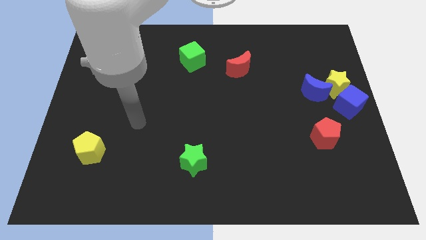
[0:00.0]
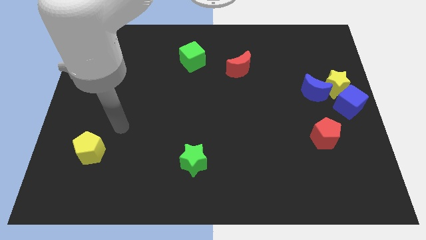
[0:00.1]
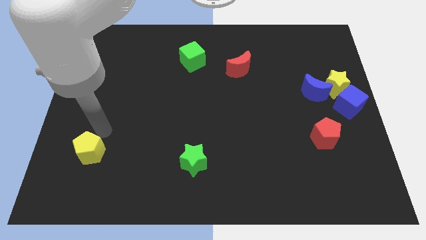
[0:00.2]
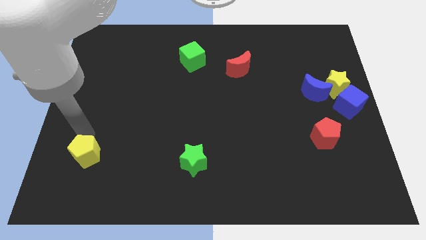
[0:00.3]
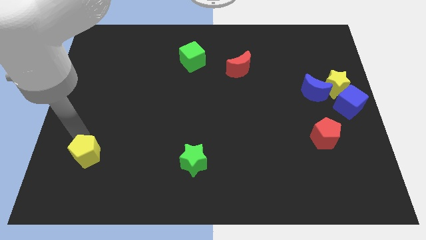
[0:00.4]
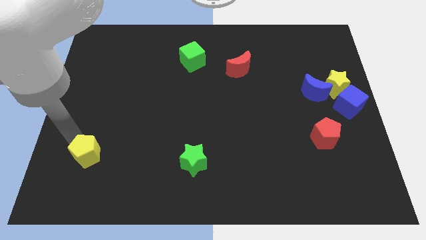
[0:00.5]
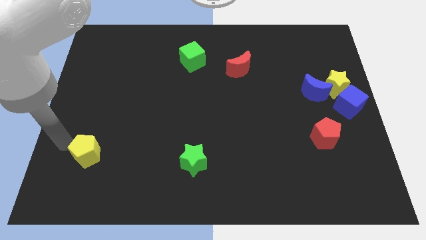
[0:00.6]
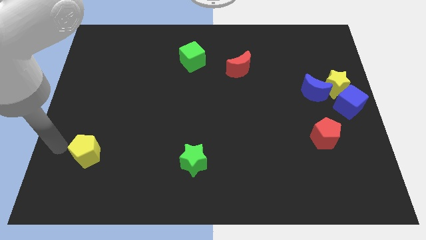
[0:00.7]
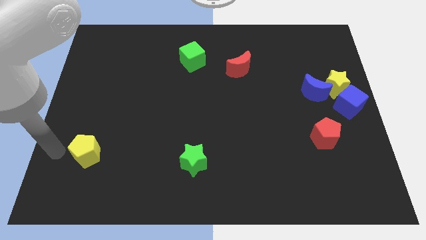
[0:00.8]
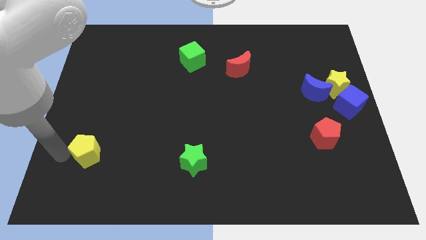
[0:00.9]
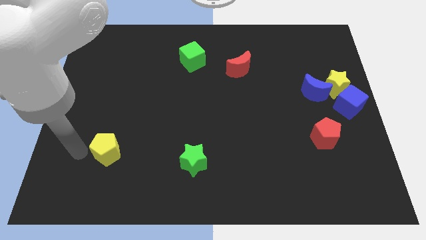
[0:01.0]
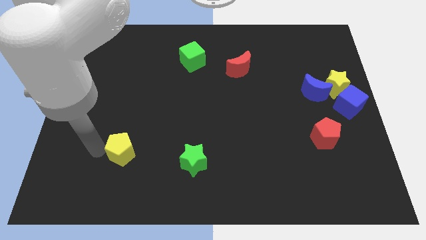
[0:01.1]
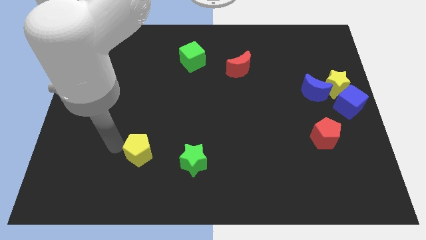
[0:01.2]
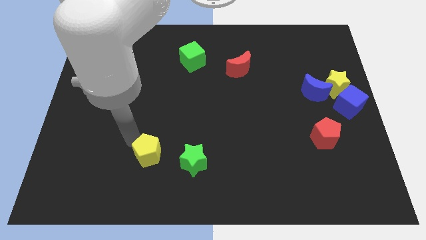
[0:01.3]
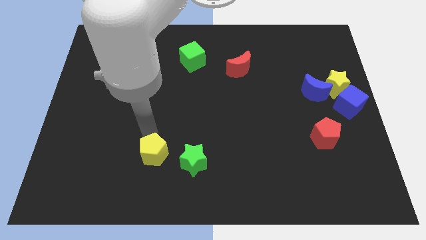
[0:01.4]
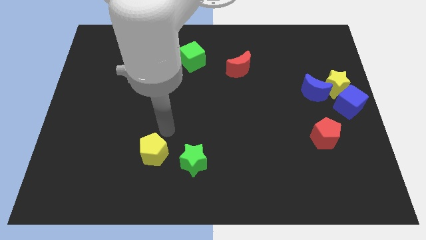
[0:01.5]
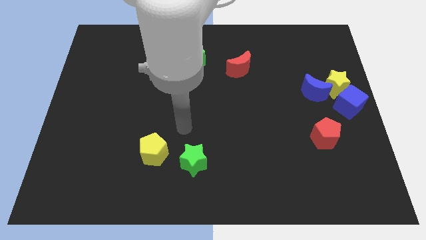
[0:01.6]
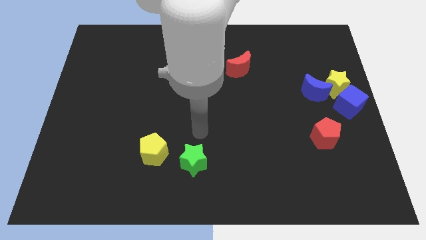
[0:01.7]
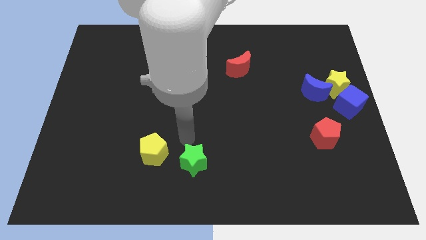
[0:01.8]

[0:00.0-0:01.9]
move the yellow pentagon left side of the green star

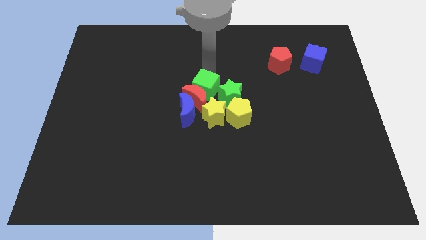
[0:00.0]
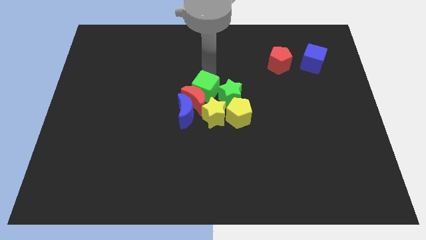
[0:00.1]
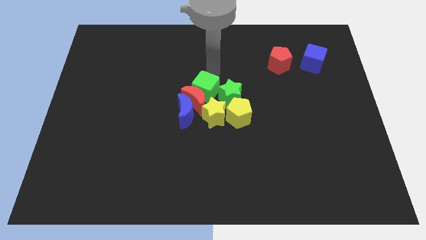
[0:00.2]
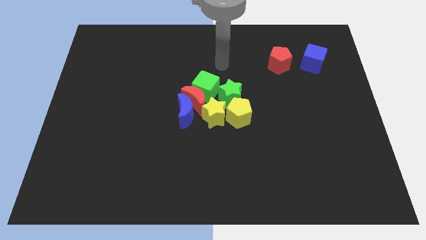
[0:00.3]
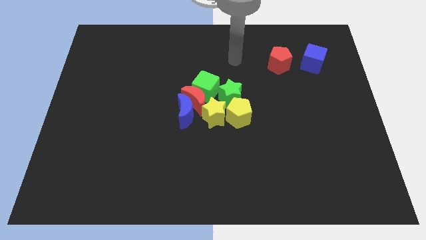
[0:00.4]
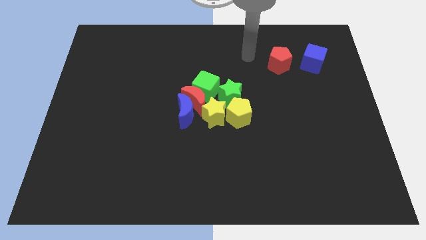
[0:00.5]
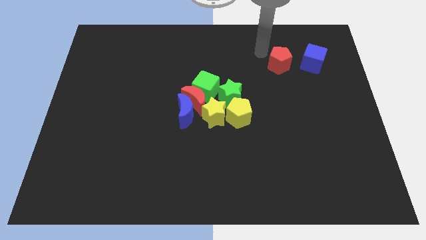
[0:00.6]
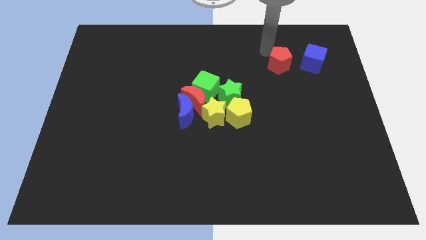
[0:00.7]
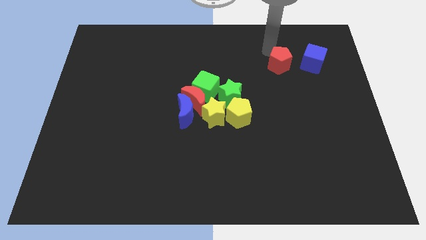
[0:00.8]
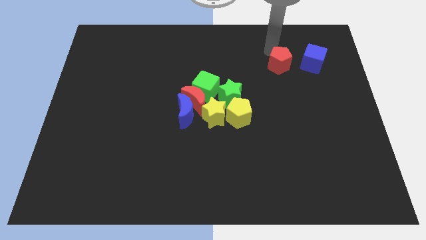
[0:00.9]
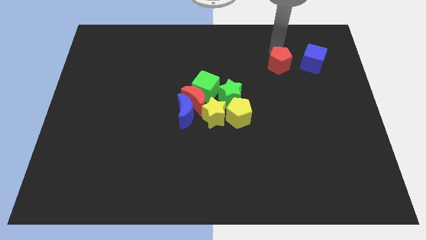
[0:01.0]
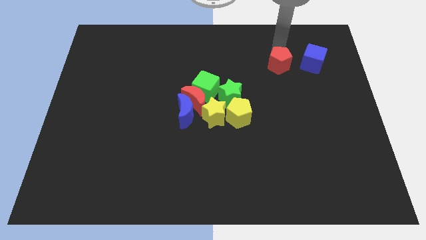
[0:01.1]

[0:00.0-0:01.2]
move your arm away from the green cube

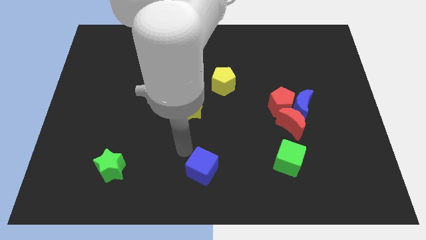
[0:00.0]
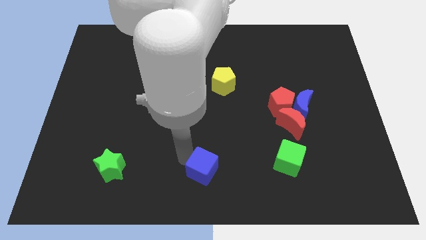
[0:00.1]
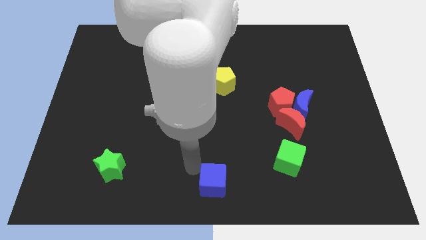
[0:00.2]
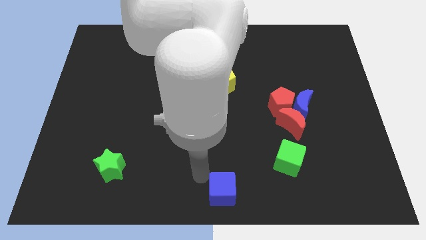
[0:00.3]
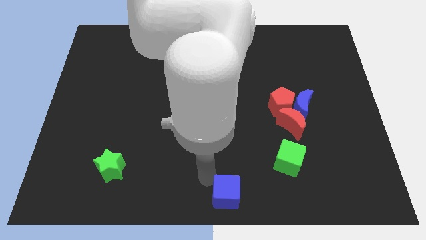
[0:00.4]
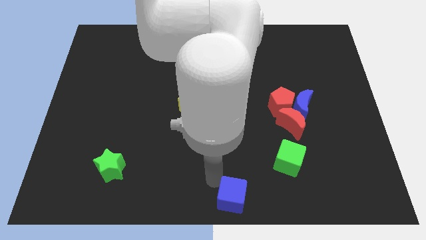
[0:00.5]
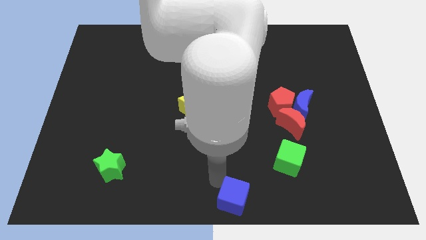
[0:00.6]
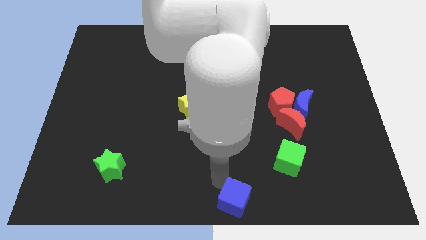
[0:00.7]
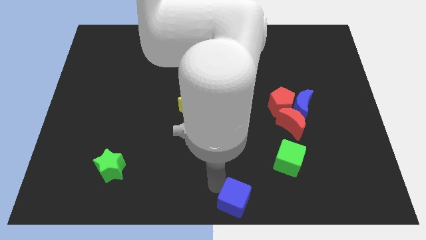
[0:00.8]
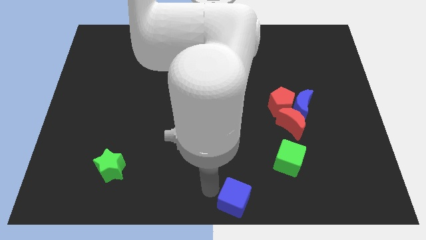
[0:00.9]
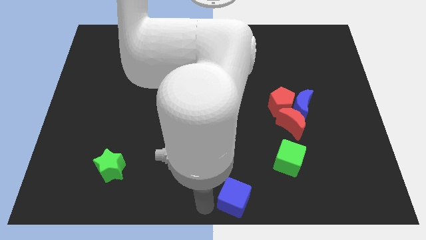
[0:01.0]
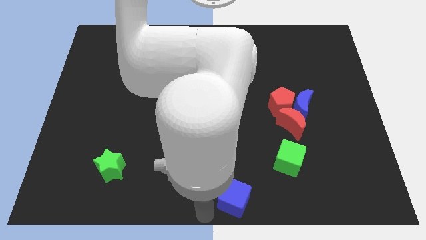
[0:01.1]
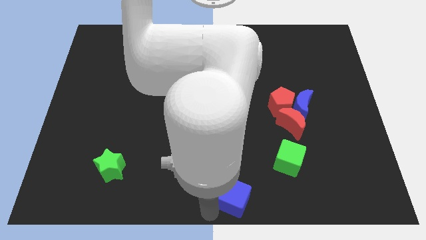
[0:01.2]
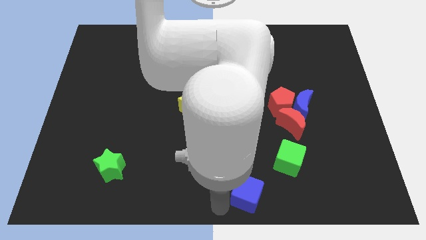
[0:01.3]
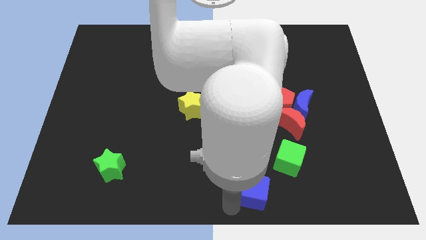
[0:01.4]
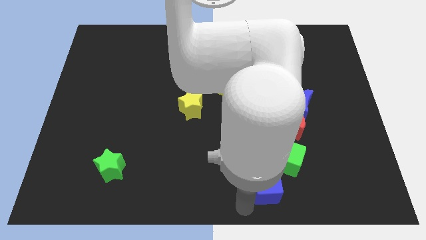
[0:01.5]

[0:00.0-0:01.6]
place the blue cube at the bottom left side of green cube

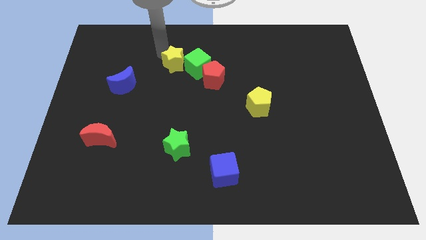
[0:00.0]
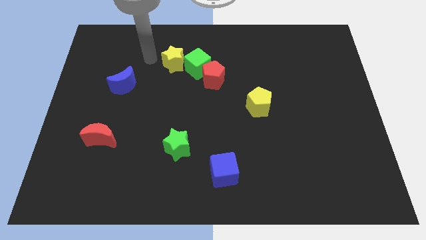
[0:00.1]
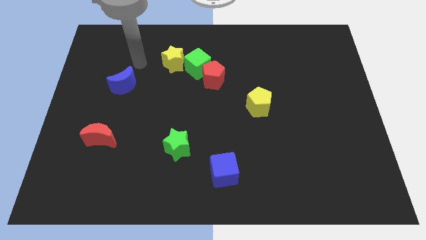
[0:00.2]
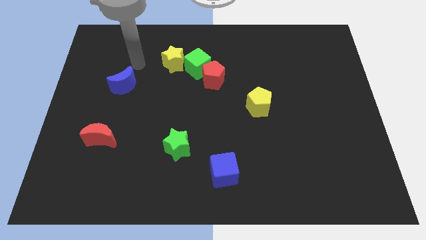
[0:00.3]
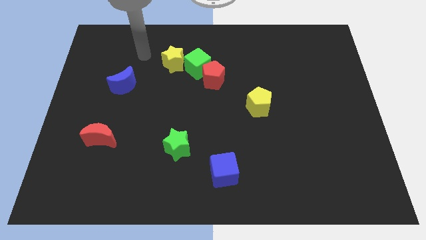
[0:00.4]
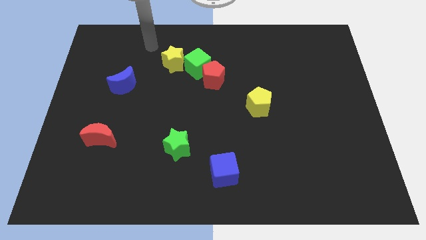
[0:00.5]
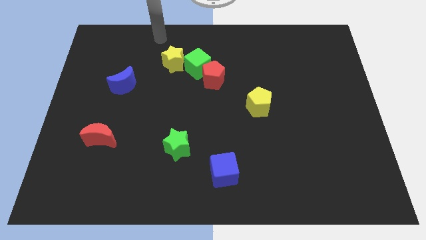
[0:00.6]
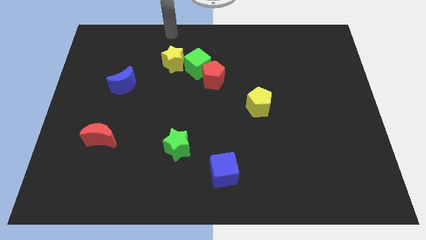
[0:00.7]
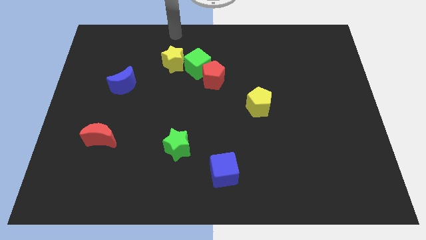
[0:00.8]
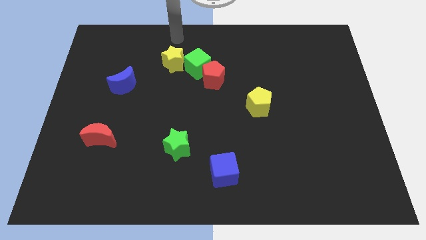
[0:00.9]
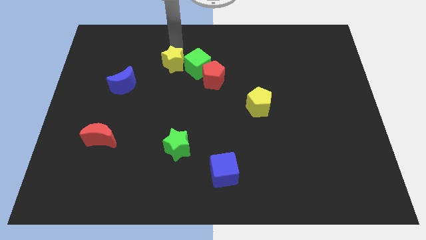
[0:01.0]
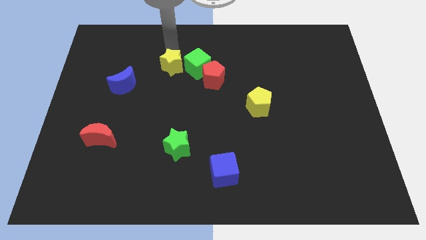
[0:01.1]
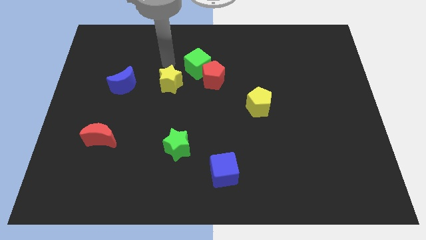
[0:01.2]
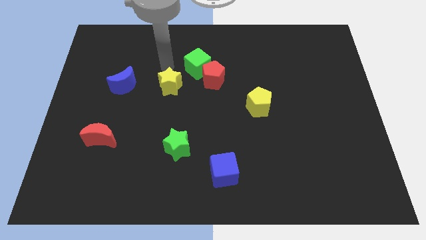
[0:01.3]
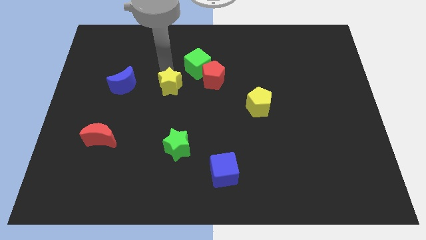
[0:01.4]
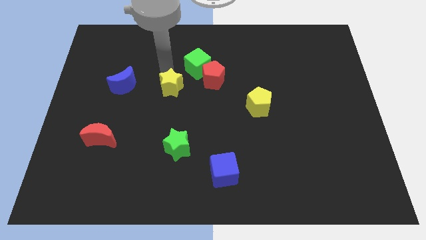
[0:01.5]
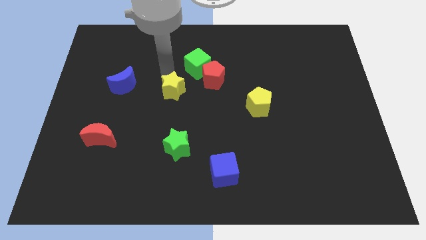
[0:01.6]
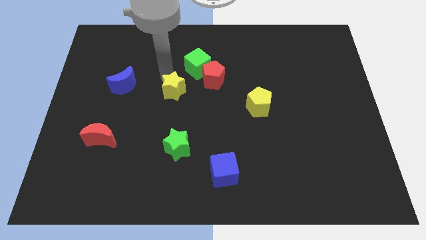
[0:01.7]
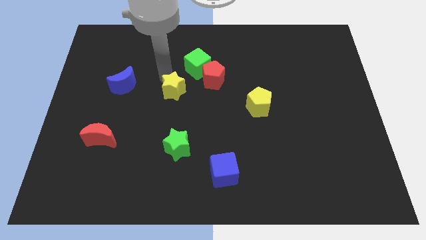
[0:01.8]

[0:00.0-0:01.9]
place the yellow star right to the blue crescent

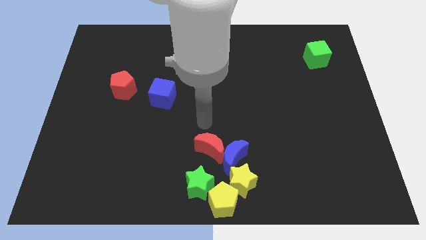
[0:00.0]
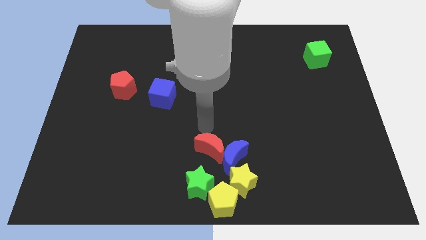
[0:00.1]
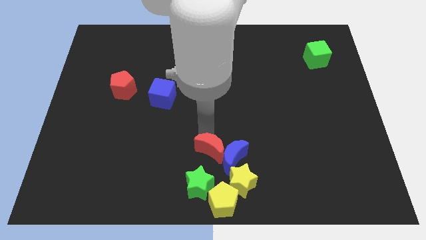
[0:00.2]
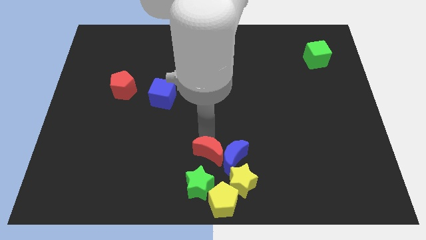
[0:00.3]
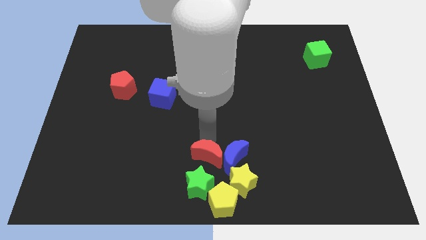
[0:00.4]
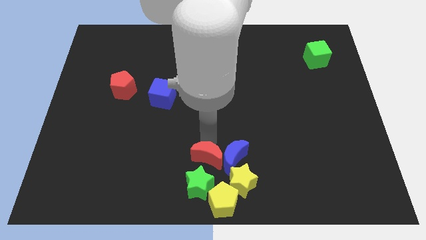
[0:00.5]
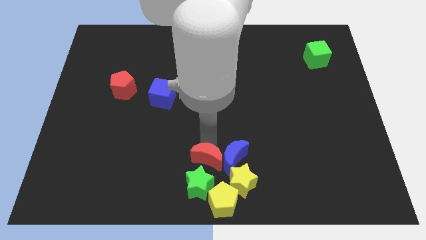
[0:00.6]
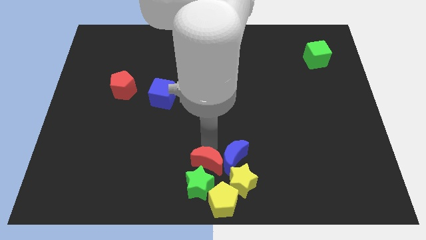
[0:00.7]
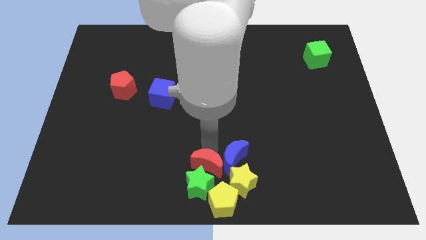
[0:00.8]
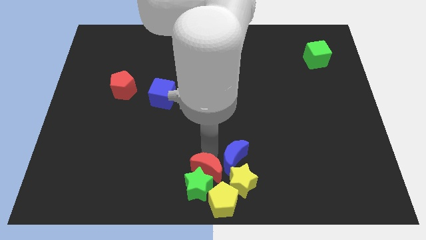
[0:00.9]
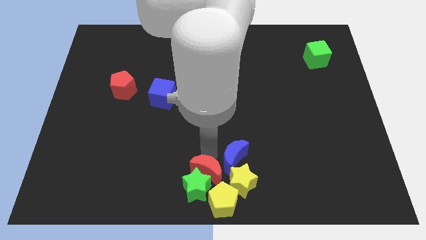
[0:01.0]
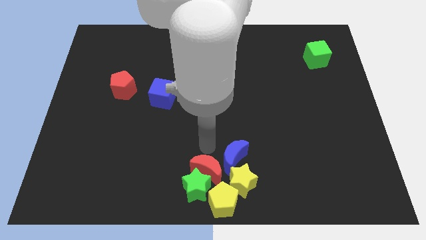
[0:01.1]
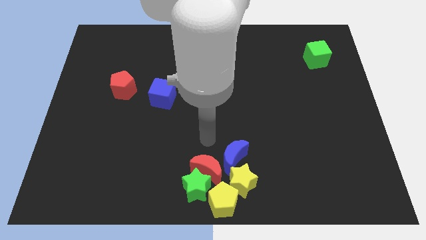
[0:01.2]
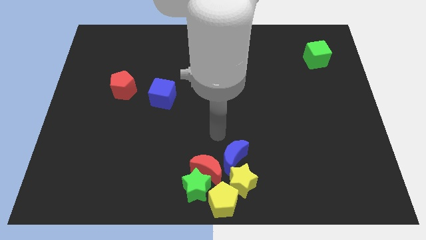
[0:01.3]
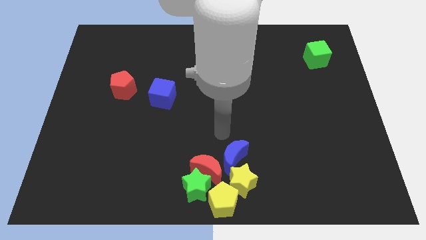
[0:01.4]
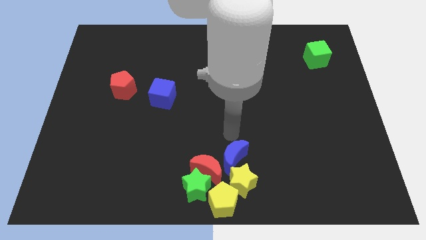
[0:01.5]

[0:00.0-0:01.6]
place red moon above the green star

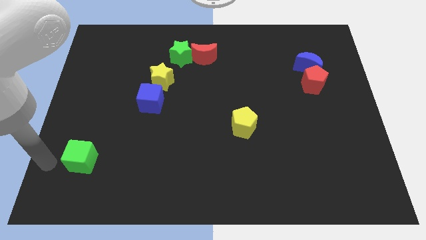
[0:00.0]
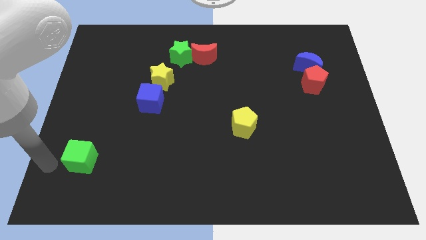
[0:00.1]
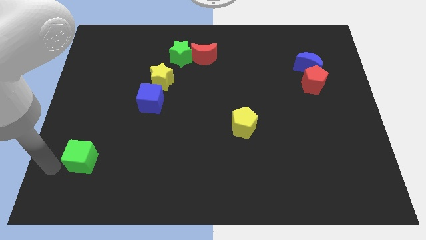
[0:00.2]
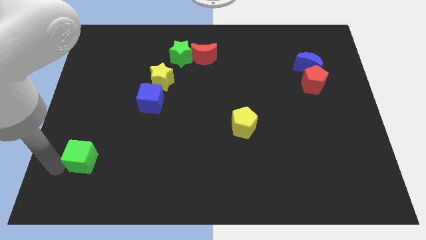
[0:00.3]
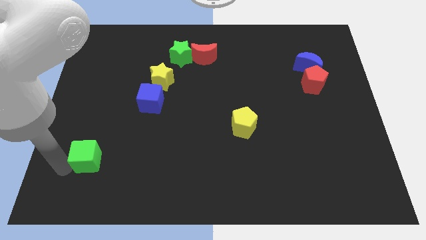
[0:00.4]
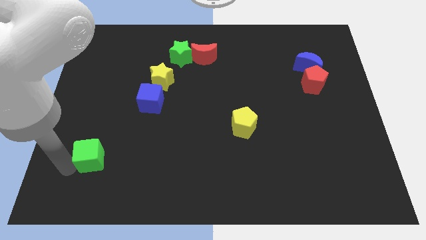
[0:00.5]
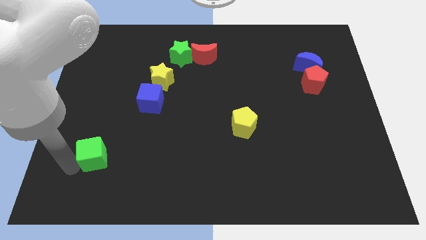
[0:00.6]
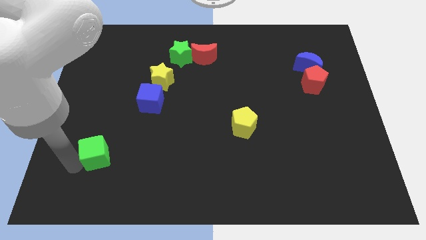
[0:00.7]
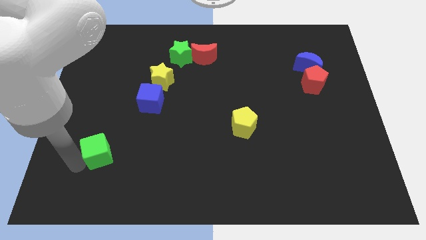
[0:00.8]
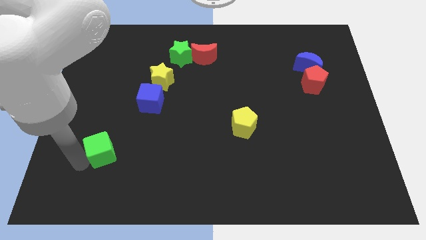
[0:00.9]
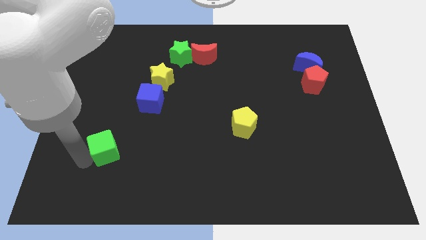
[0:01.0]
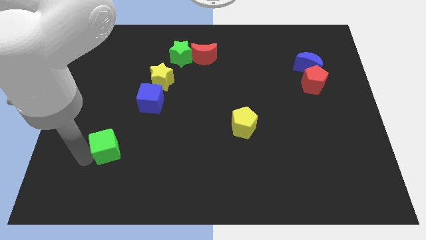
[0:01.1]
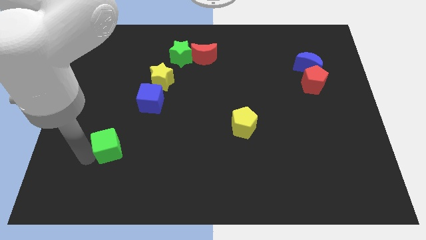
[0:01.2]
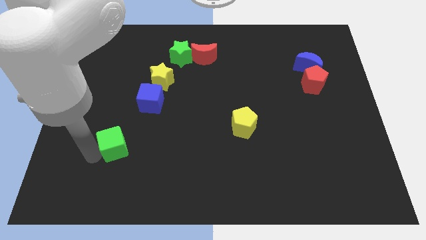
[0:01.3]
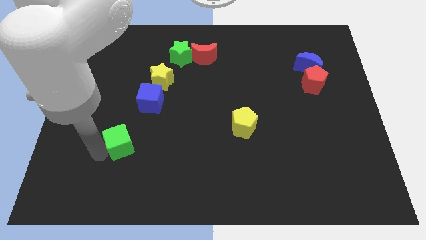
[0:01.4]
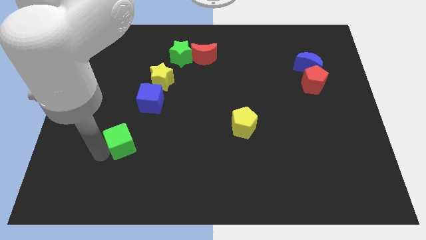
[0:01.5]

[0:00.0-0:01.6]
push the green cube towards the blue cube
